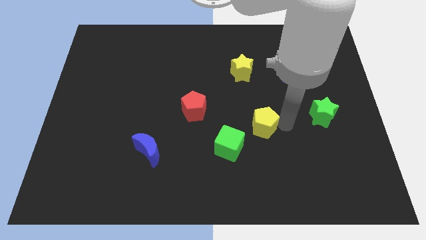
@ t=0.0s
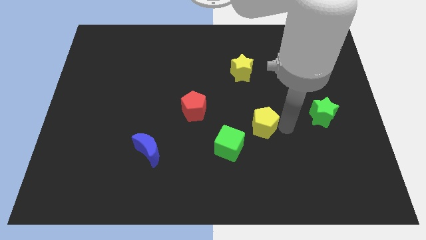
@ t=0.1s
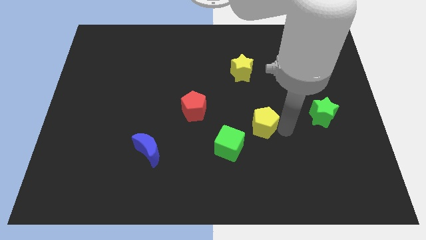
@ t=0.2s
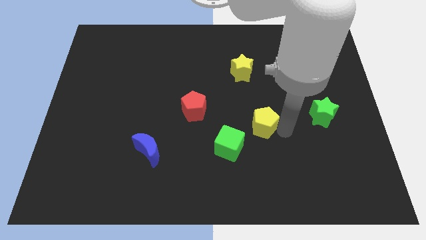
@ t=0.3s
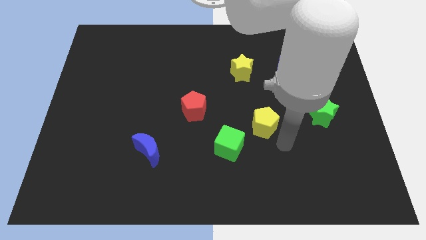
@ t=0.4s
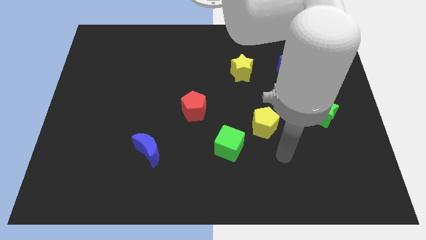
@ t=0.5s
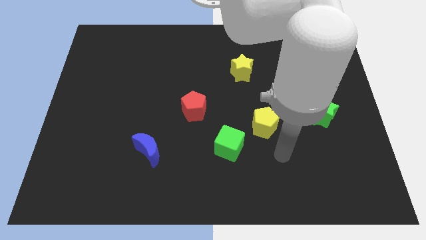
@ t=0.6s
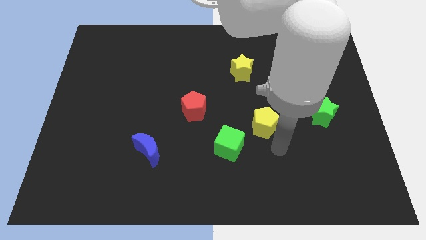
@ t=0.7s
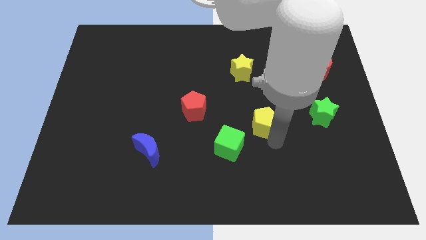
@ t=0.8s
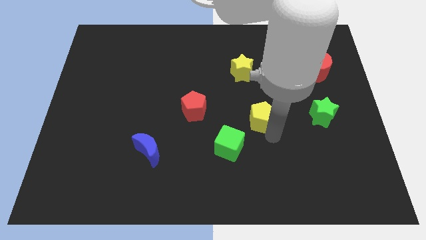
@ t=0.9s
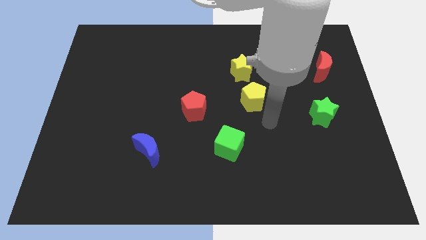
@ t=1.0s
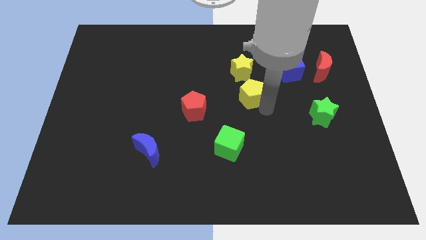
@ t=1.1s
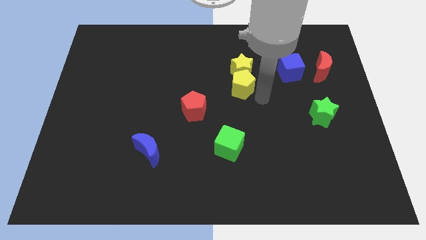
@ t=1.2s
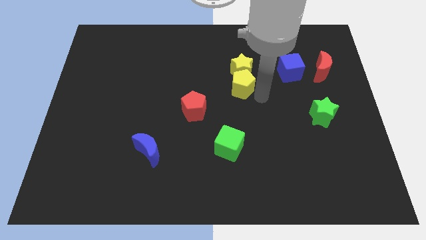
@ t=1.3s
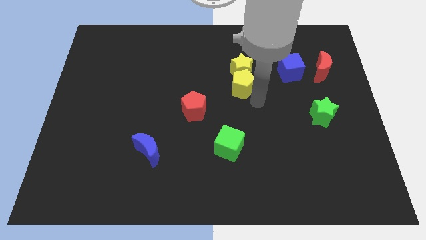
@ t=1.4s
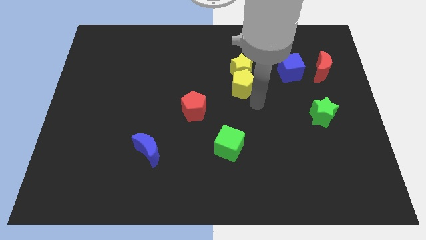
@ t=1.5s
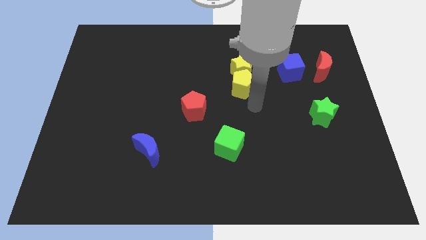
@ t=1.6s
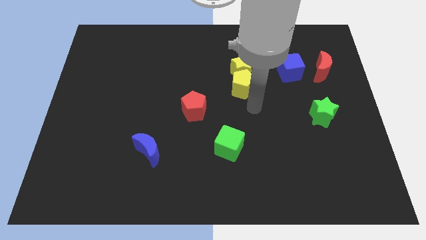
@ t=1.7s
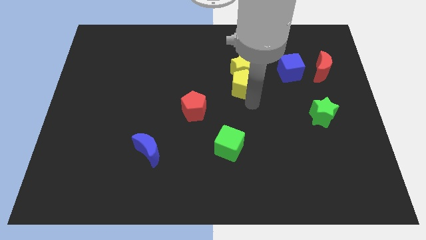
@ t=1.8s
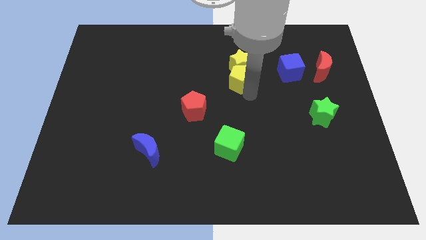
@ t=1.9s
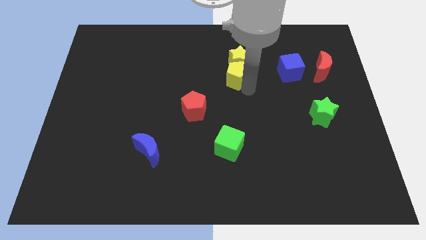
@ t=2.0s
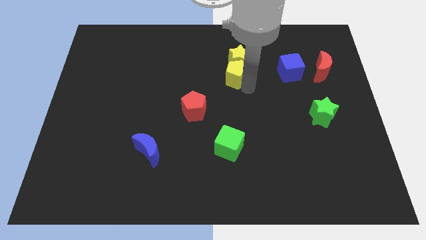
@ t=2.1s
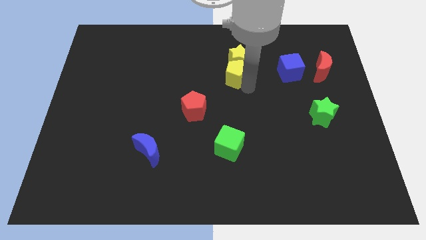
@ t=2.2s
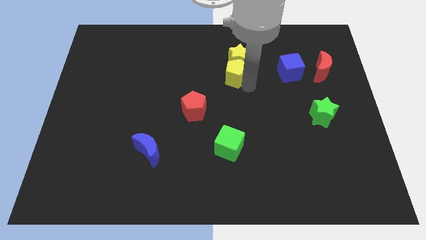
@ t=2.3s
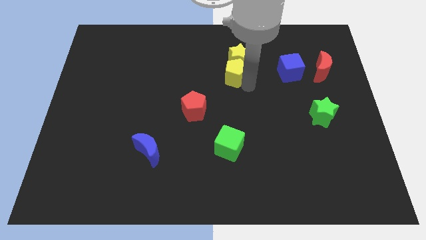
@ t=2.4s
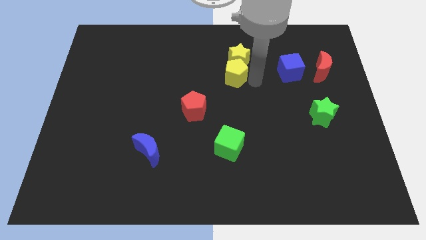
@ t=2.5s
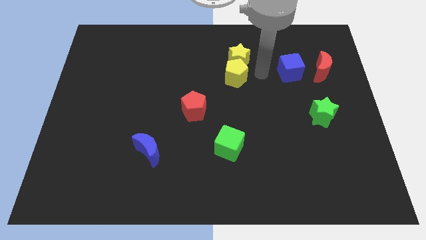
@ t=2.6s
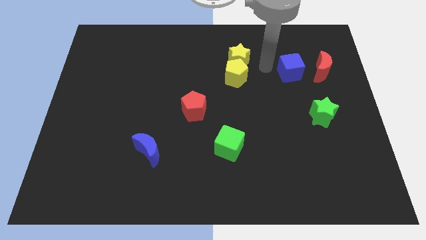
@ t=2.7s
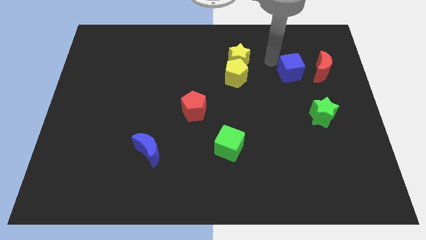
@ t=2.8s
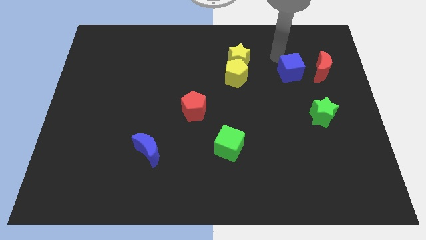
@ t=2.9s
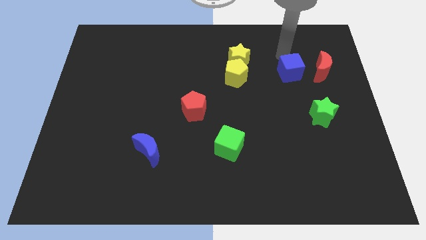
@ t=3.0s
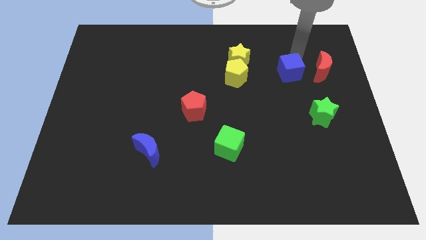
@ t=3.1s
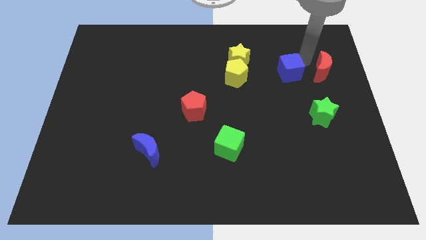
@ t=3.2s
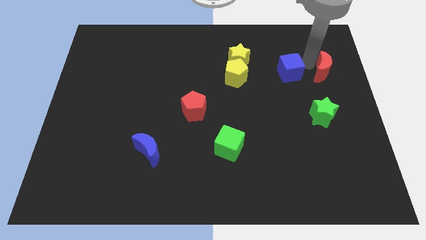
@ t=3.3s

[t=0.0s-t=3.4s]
push the yellow pentagon into the yellow star

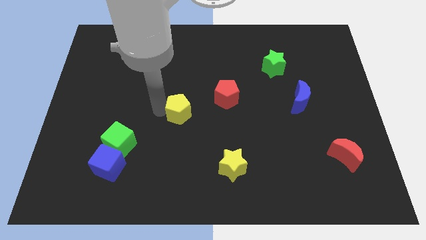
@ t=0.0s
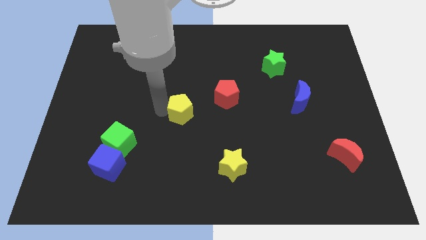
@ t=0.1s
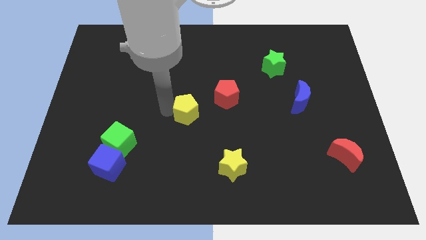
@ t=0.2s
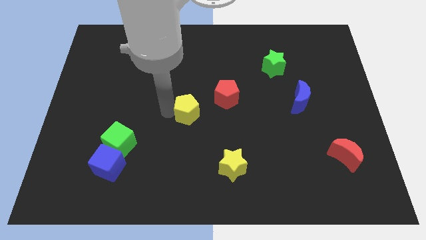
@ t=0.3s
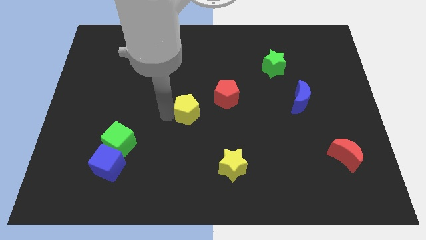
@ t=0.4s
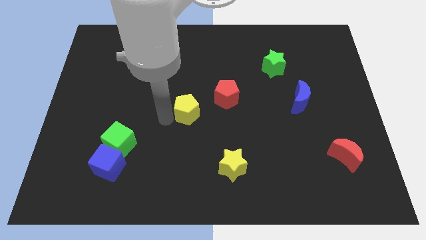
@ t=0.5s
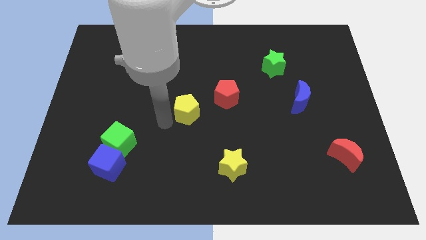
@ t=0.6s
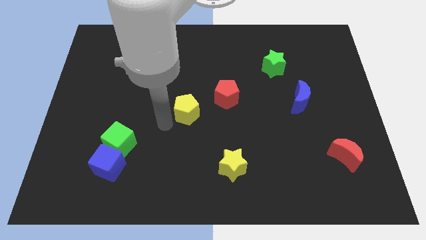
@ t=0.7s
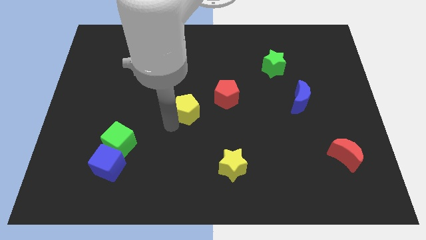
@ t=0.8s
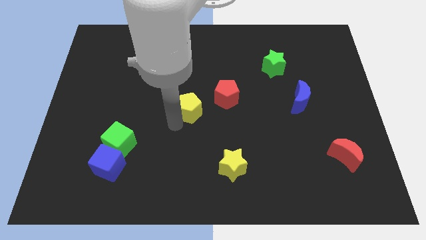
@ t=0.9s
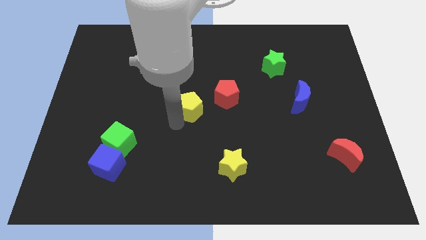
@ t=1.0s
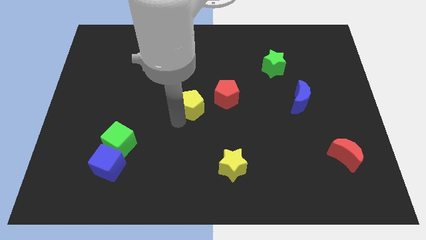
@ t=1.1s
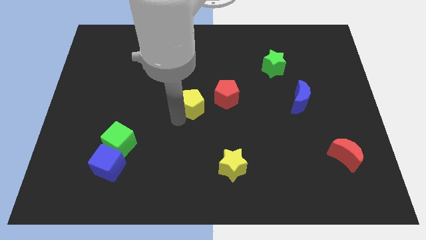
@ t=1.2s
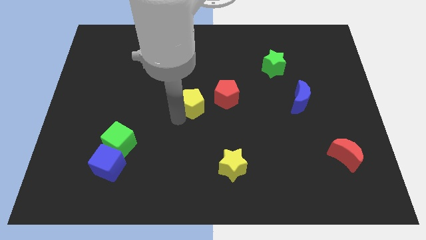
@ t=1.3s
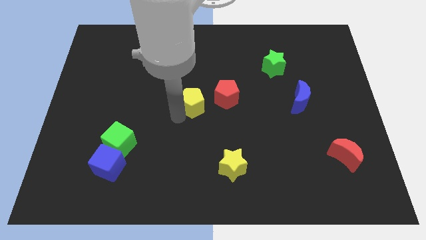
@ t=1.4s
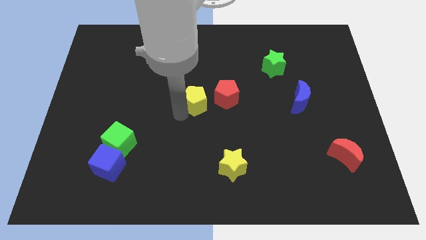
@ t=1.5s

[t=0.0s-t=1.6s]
place yellow pentagon to the center of the board

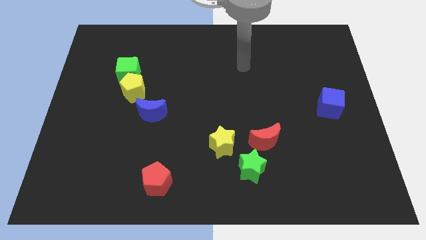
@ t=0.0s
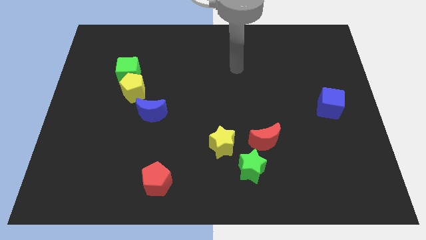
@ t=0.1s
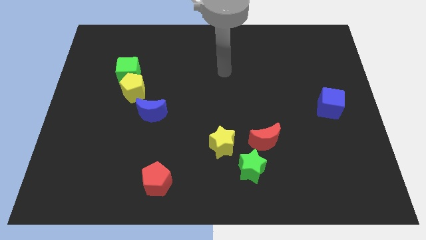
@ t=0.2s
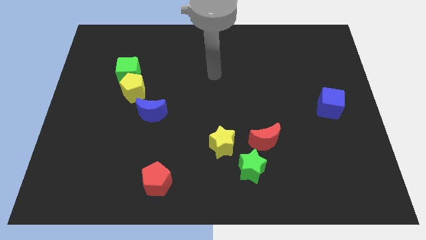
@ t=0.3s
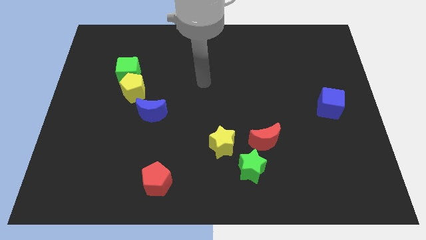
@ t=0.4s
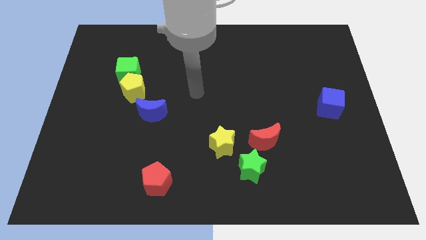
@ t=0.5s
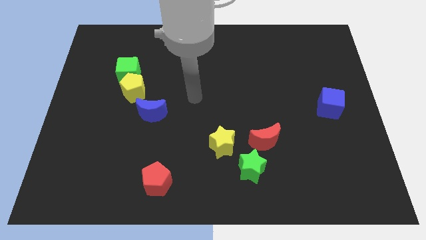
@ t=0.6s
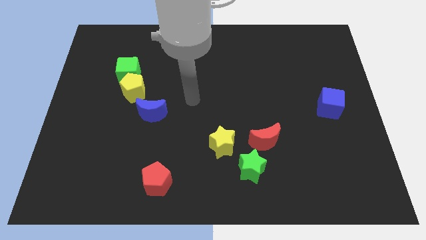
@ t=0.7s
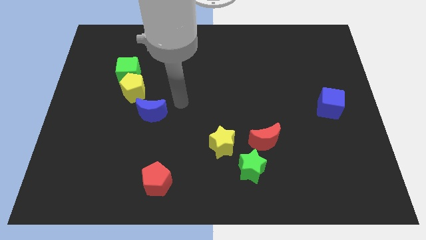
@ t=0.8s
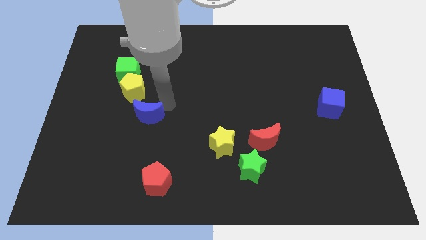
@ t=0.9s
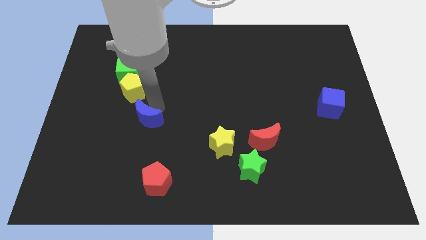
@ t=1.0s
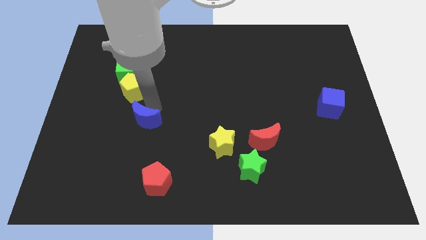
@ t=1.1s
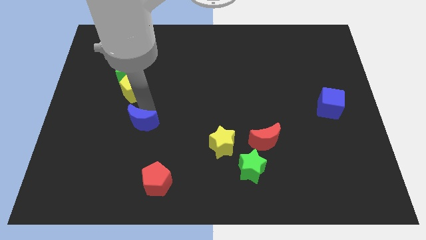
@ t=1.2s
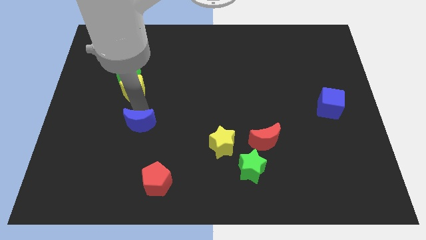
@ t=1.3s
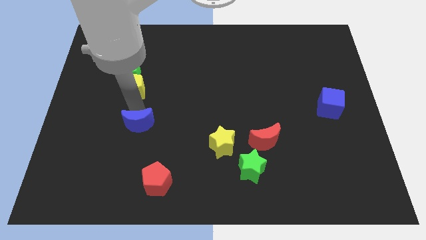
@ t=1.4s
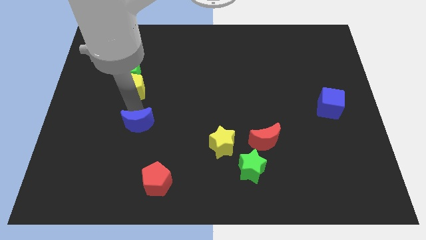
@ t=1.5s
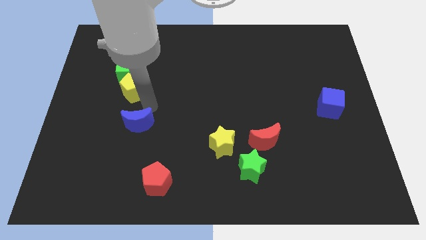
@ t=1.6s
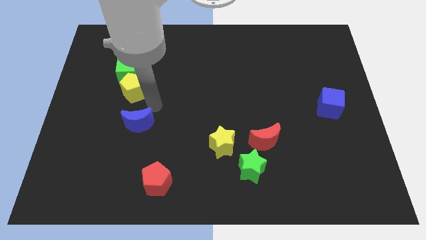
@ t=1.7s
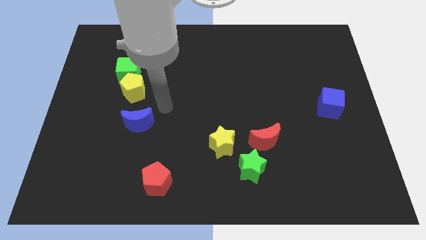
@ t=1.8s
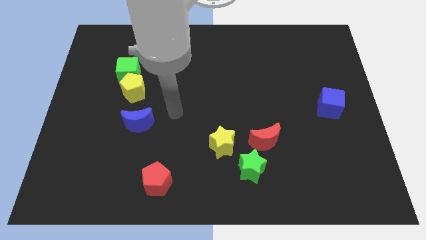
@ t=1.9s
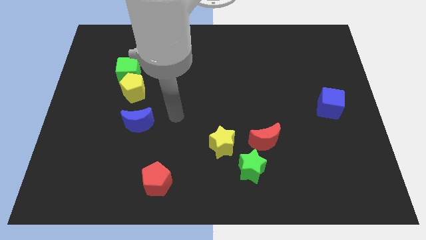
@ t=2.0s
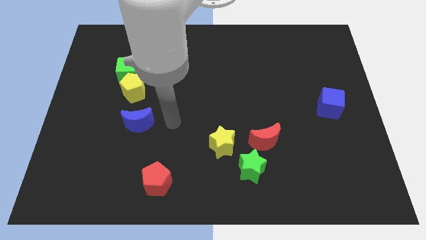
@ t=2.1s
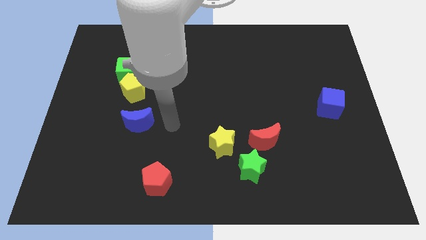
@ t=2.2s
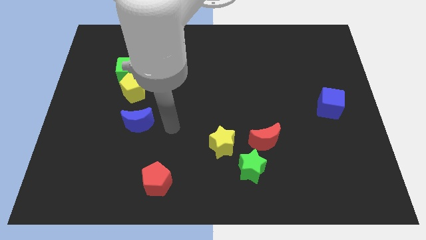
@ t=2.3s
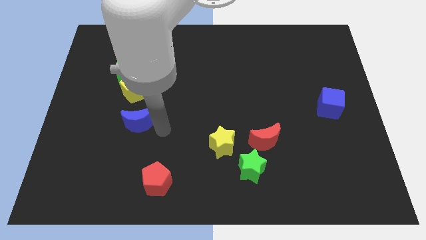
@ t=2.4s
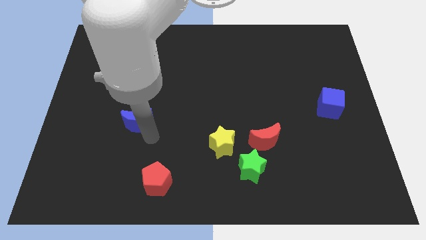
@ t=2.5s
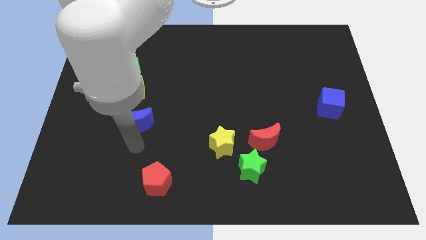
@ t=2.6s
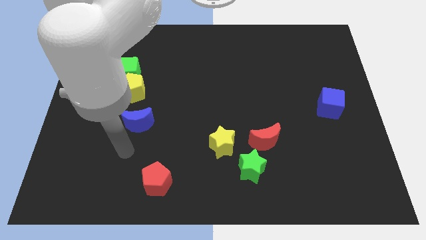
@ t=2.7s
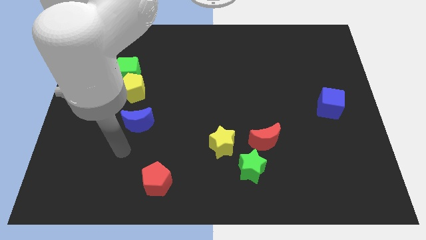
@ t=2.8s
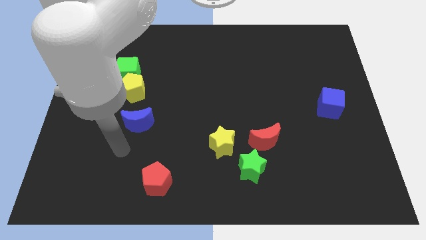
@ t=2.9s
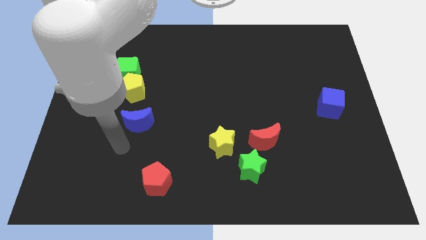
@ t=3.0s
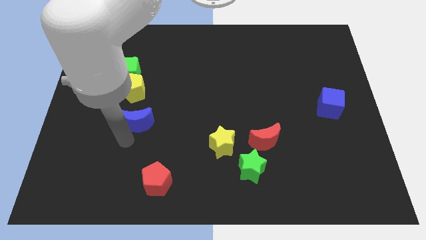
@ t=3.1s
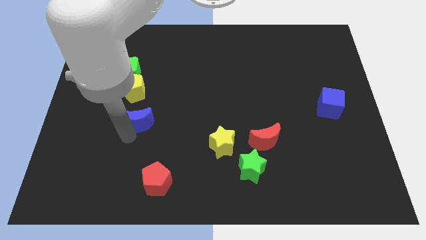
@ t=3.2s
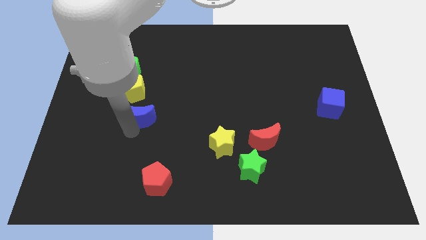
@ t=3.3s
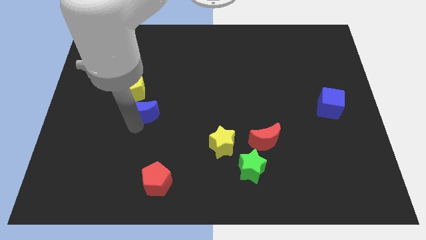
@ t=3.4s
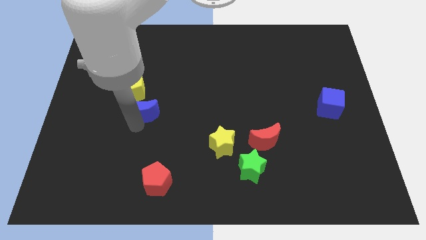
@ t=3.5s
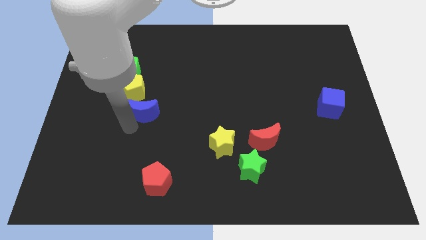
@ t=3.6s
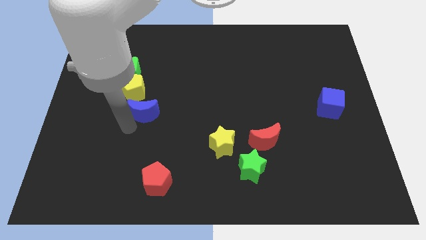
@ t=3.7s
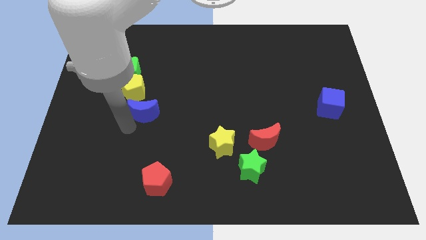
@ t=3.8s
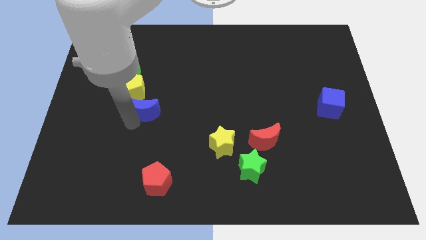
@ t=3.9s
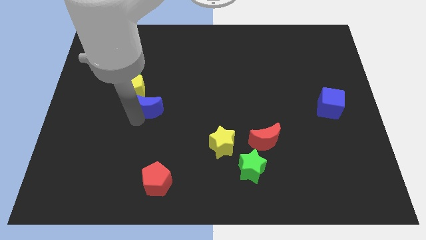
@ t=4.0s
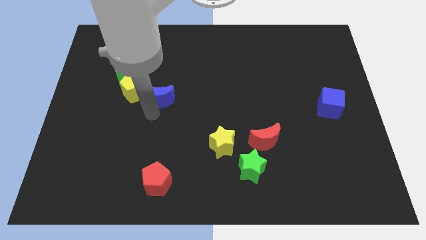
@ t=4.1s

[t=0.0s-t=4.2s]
push blue moon into the yellow pentagon
